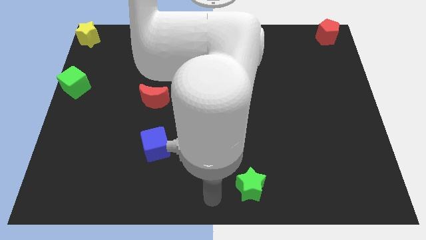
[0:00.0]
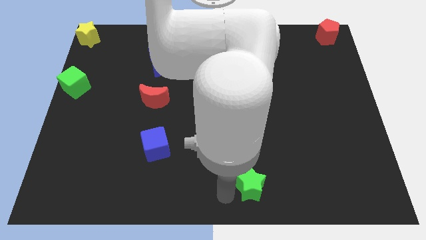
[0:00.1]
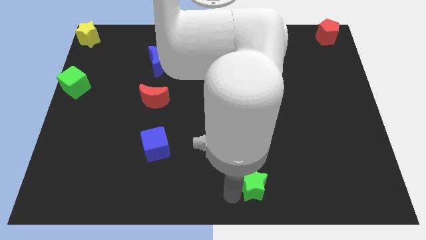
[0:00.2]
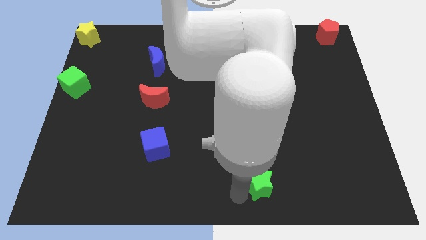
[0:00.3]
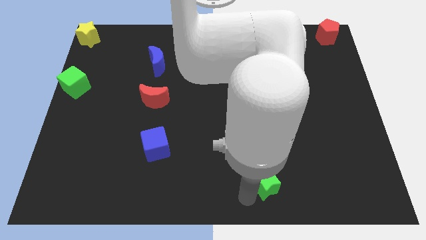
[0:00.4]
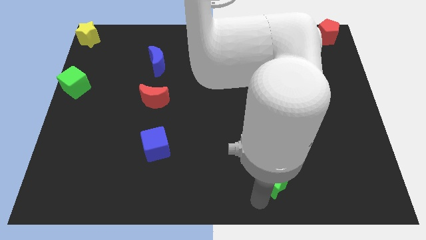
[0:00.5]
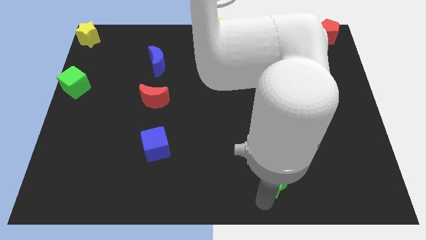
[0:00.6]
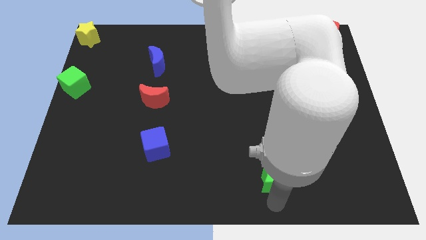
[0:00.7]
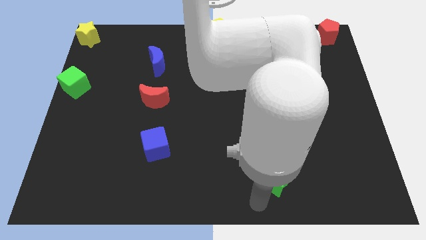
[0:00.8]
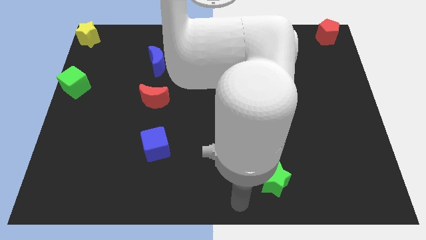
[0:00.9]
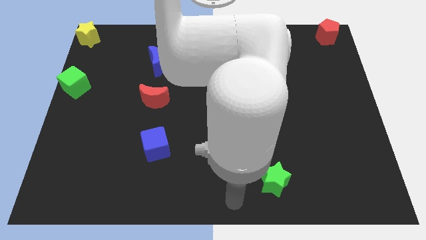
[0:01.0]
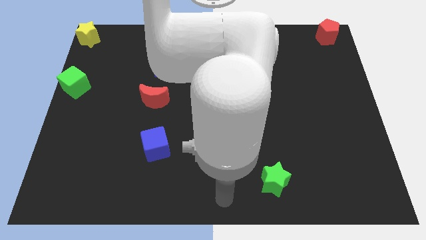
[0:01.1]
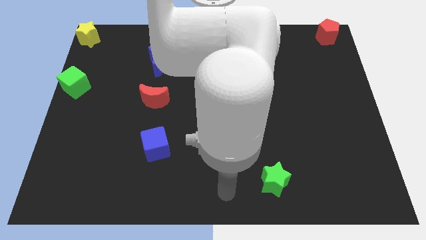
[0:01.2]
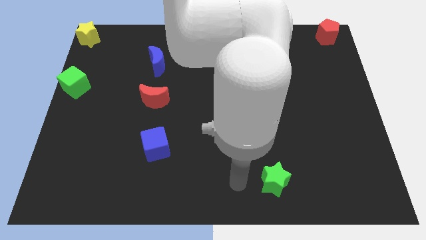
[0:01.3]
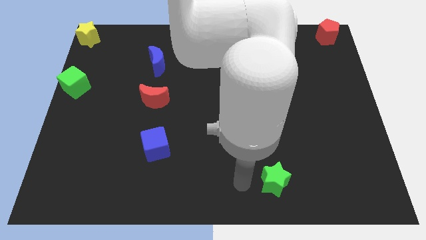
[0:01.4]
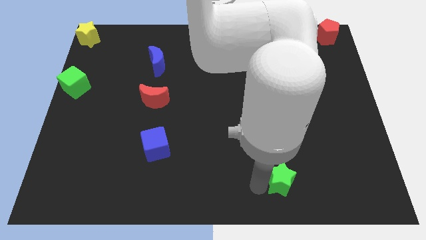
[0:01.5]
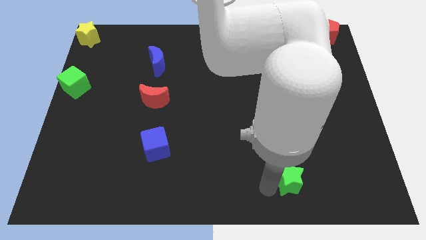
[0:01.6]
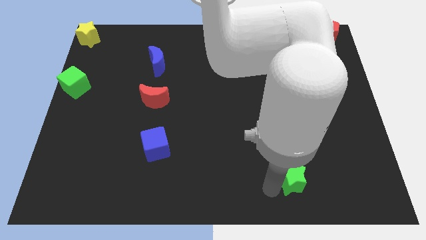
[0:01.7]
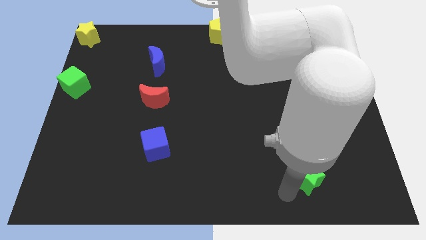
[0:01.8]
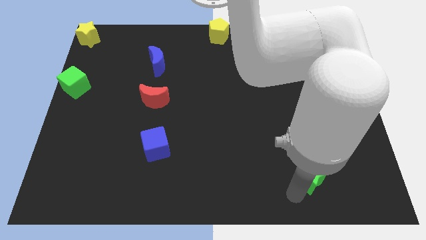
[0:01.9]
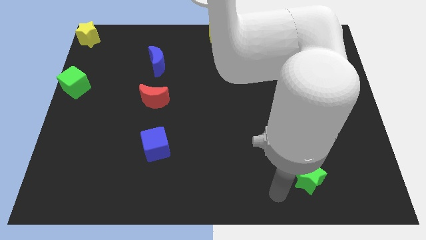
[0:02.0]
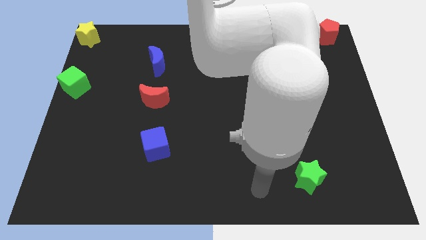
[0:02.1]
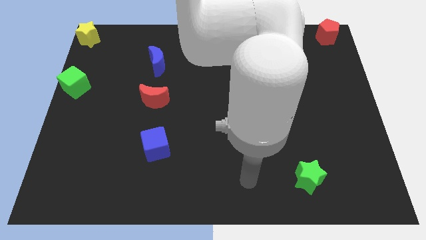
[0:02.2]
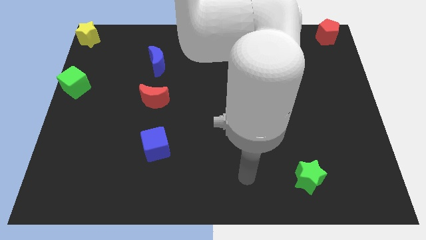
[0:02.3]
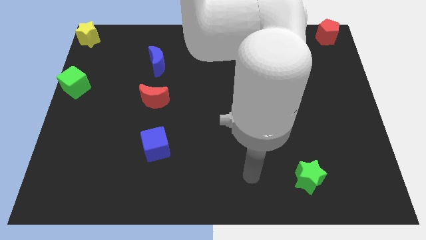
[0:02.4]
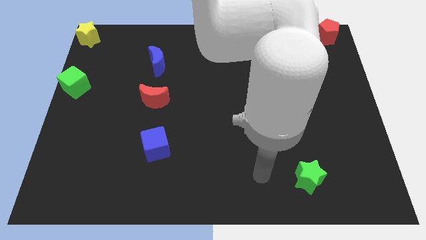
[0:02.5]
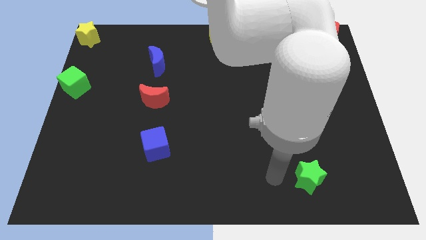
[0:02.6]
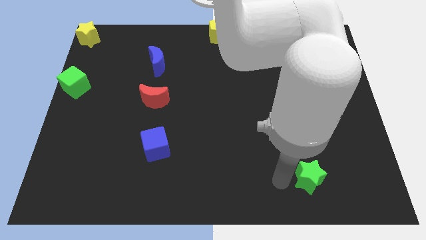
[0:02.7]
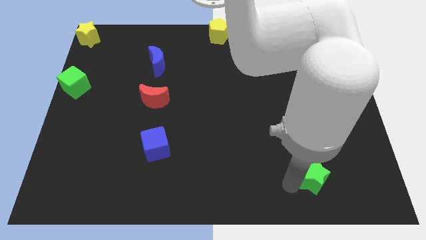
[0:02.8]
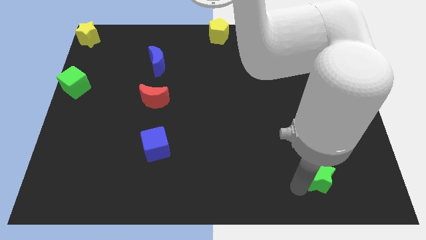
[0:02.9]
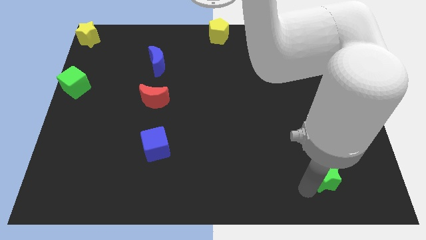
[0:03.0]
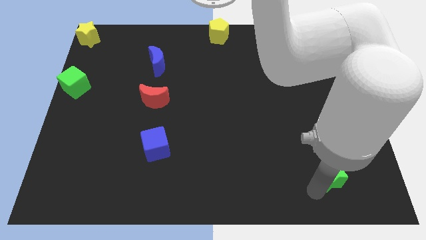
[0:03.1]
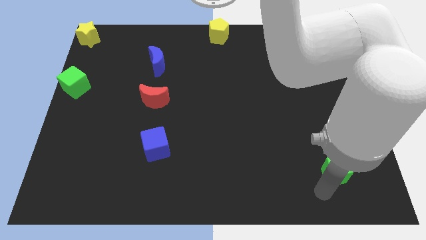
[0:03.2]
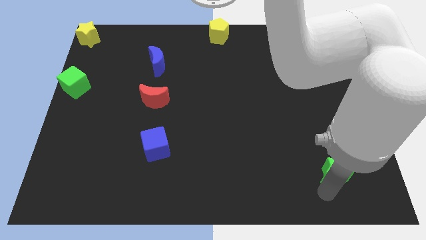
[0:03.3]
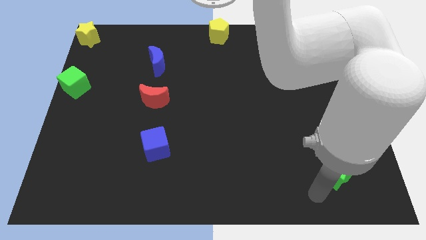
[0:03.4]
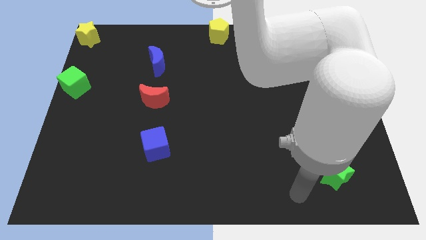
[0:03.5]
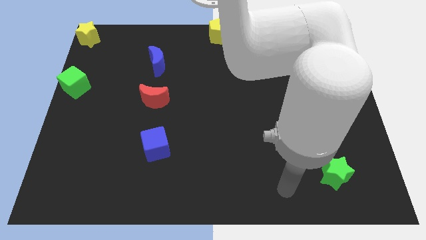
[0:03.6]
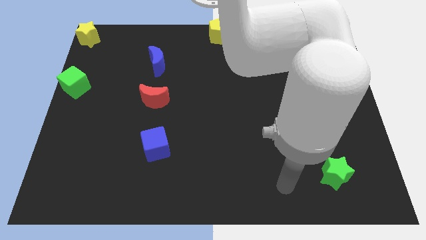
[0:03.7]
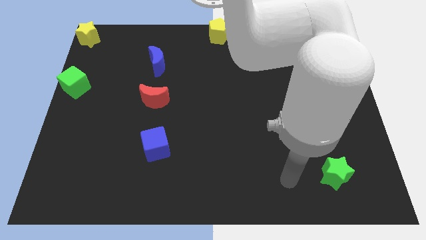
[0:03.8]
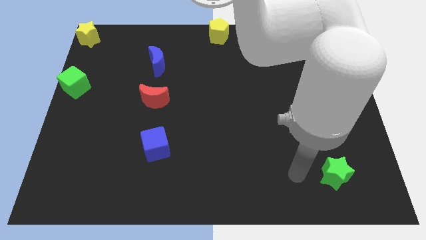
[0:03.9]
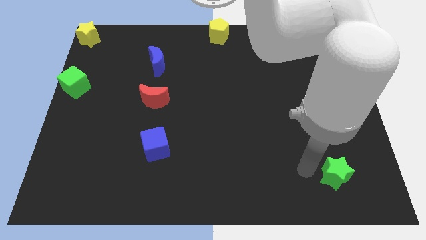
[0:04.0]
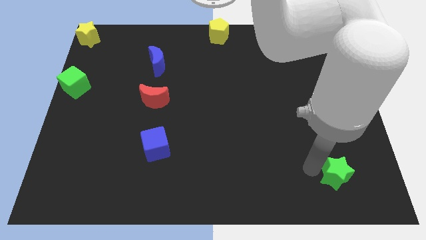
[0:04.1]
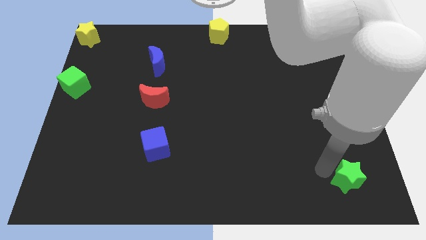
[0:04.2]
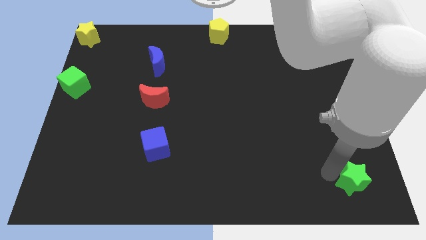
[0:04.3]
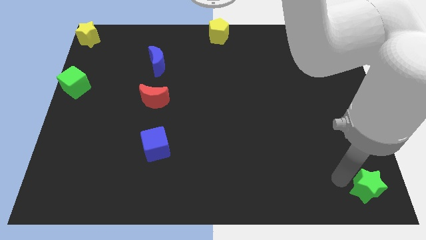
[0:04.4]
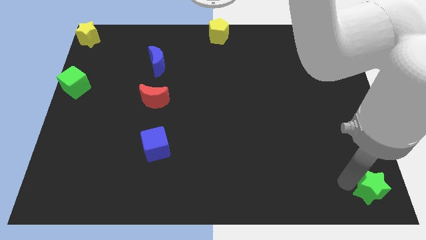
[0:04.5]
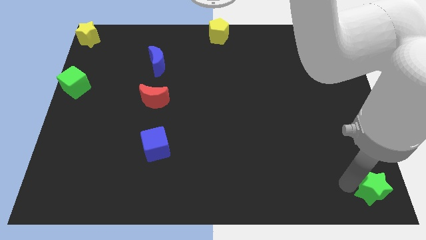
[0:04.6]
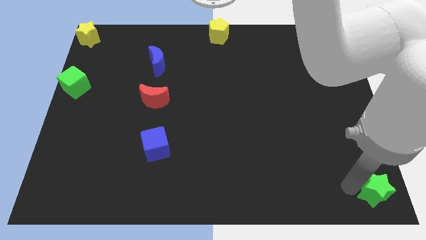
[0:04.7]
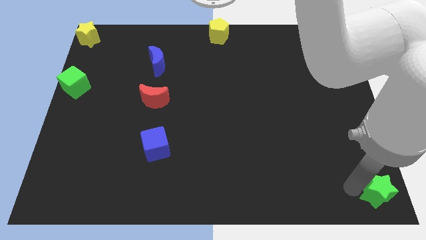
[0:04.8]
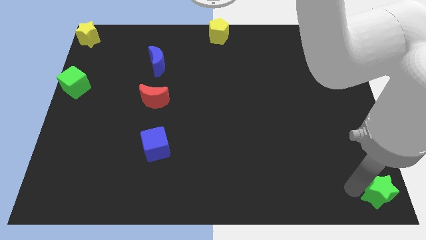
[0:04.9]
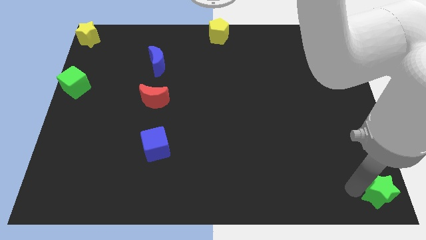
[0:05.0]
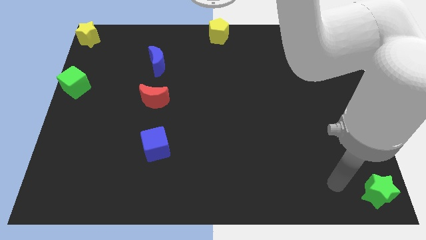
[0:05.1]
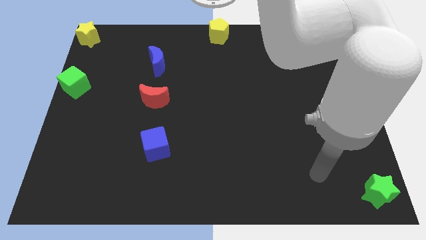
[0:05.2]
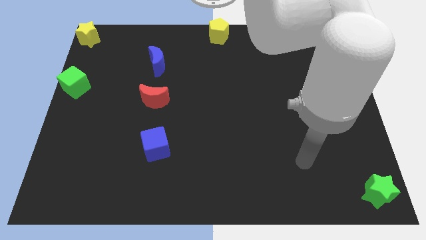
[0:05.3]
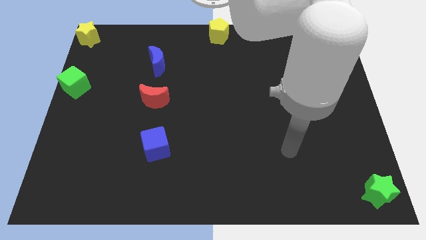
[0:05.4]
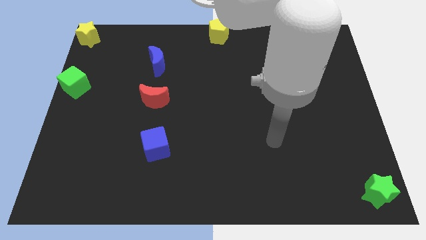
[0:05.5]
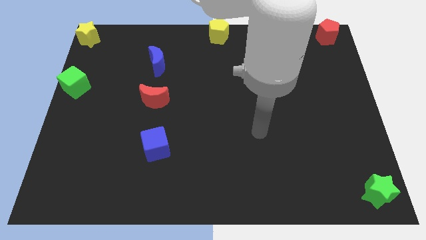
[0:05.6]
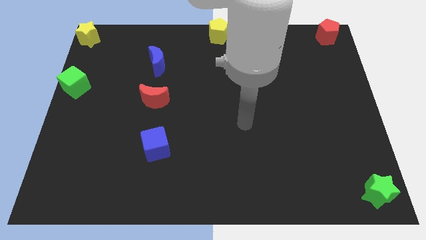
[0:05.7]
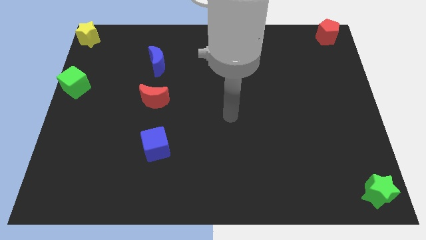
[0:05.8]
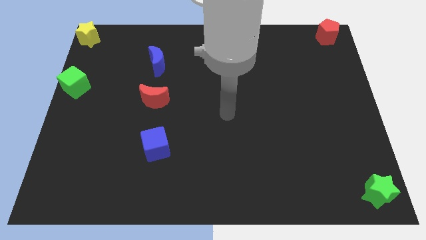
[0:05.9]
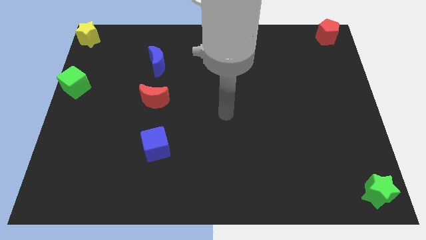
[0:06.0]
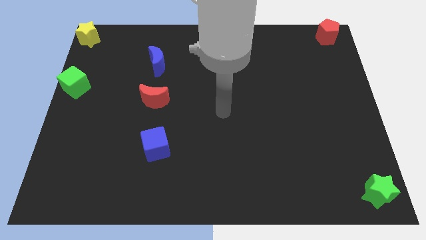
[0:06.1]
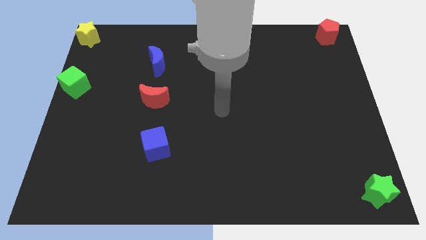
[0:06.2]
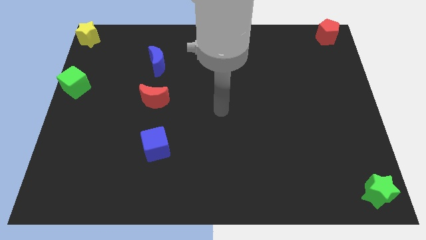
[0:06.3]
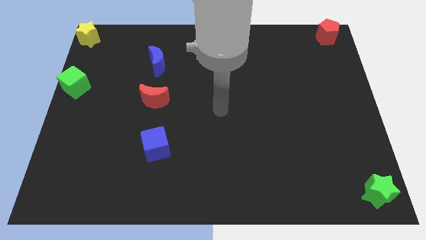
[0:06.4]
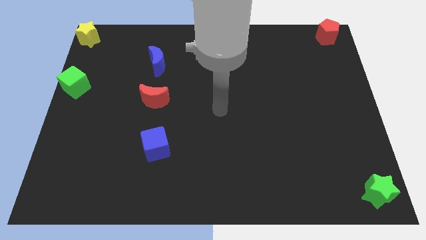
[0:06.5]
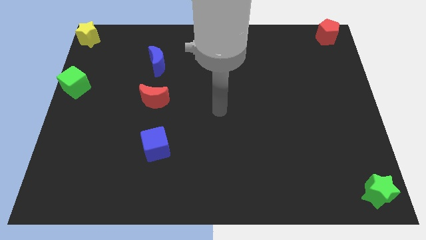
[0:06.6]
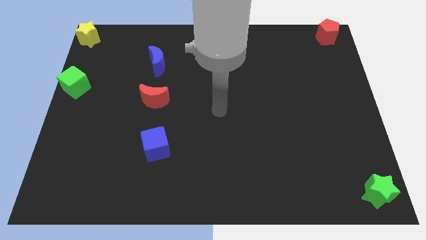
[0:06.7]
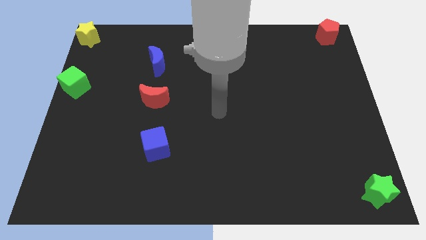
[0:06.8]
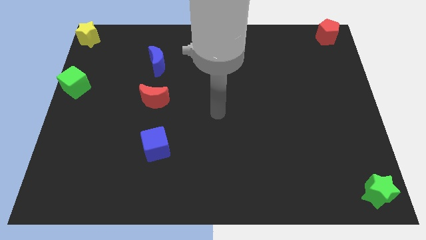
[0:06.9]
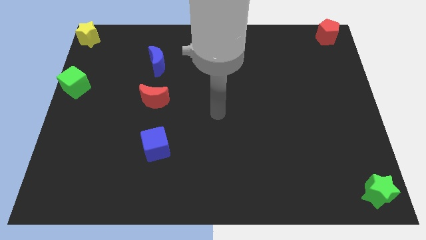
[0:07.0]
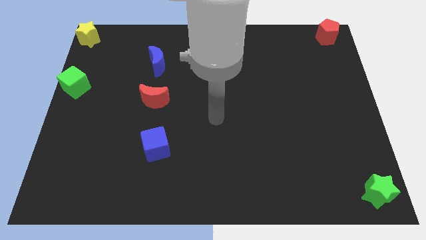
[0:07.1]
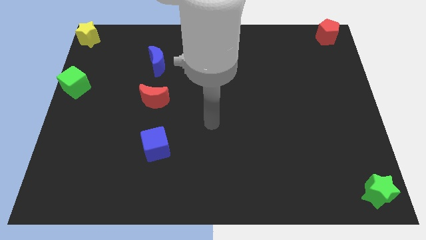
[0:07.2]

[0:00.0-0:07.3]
push the green star to the bottom right corner of the board

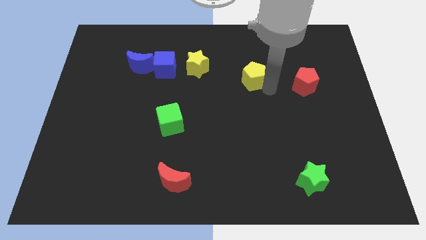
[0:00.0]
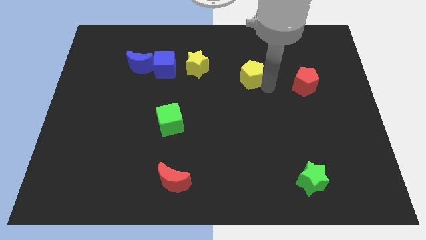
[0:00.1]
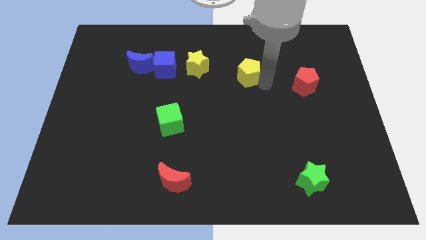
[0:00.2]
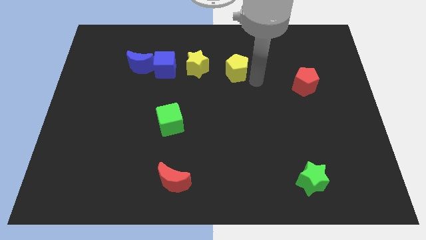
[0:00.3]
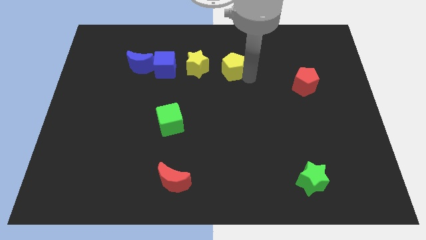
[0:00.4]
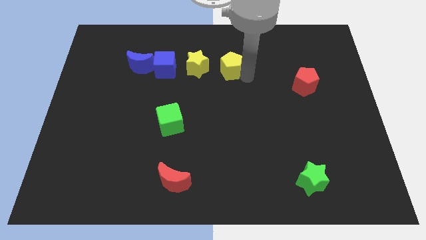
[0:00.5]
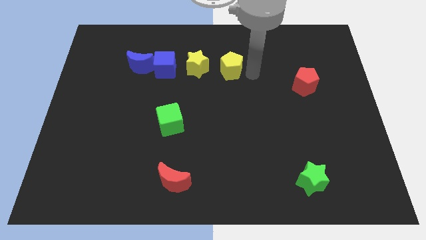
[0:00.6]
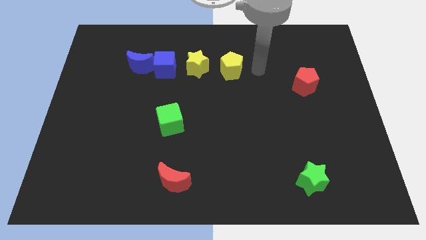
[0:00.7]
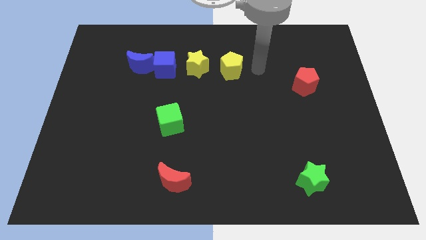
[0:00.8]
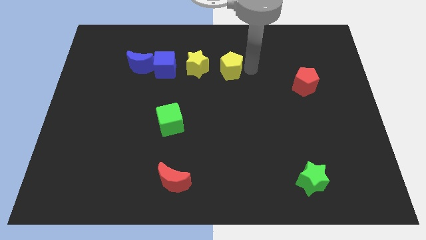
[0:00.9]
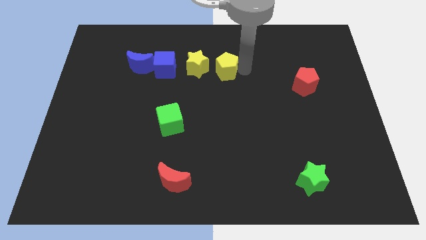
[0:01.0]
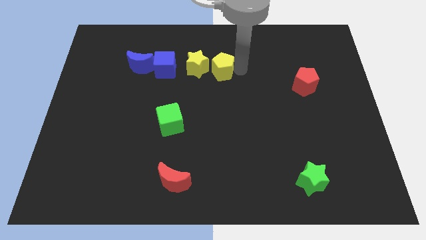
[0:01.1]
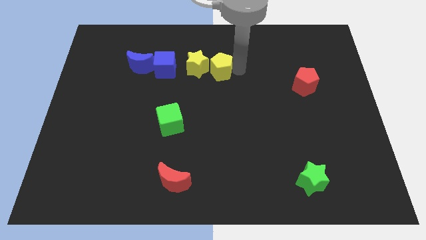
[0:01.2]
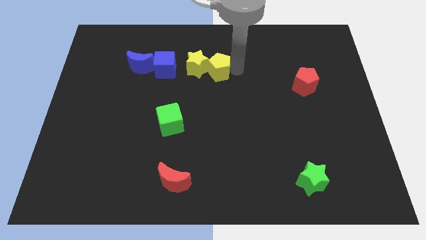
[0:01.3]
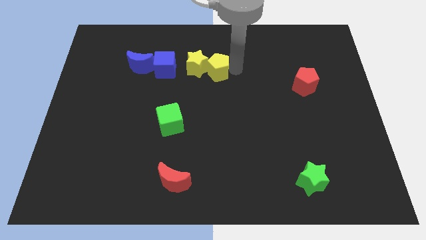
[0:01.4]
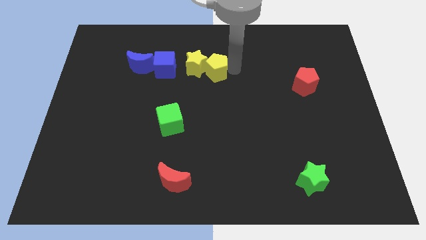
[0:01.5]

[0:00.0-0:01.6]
move the yellow pentagon into the yellow star
